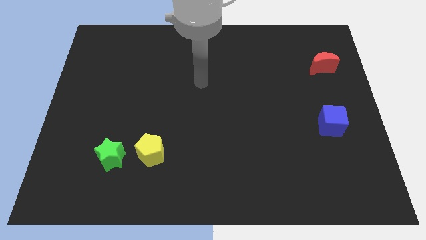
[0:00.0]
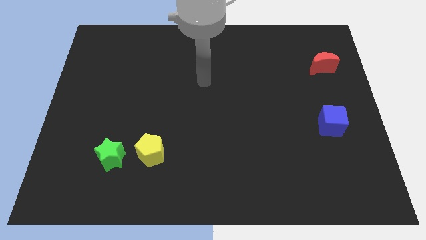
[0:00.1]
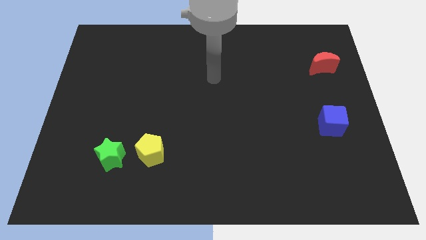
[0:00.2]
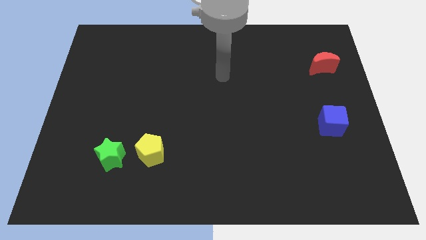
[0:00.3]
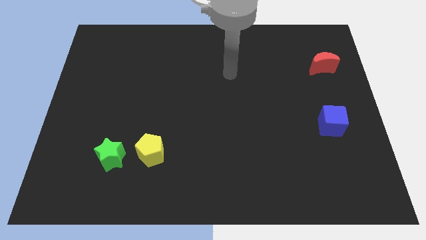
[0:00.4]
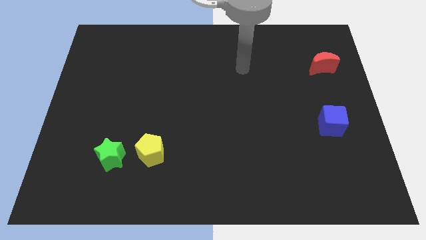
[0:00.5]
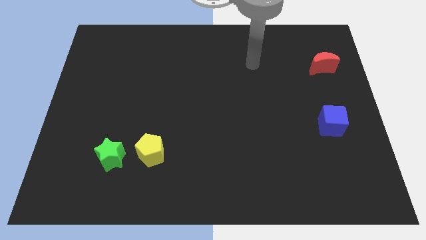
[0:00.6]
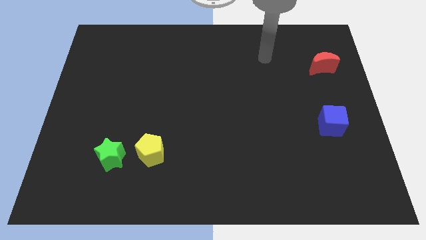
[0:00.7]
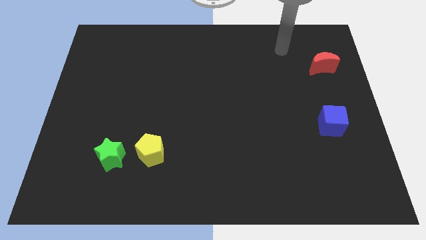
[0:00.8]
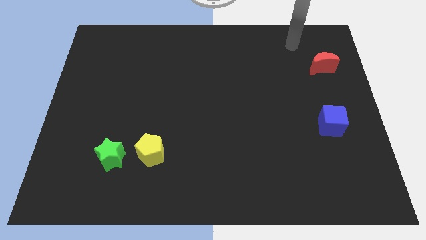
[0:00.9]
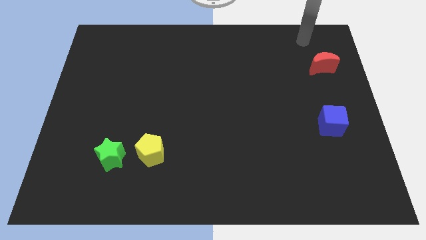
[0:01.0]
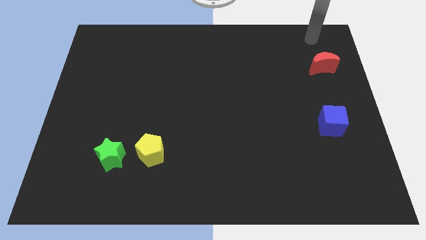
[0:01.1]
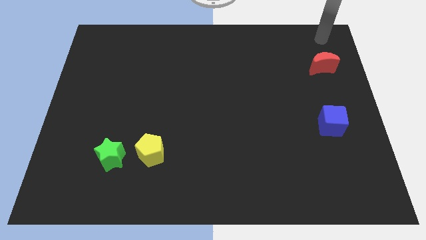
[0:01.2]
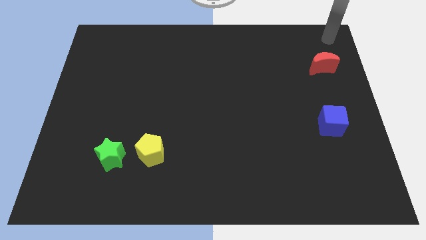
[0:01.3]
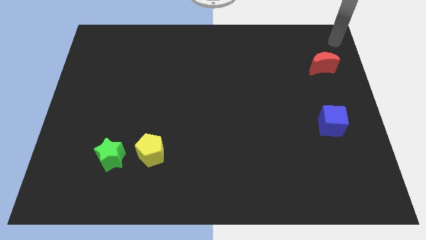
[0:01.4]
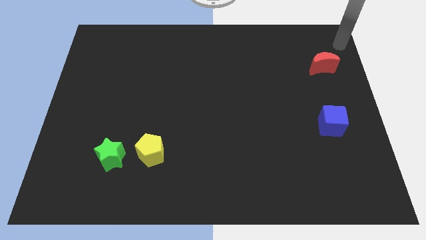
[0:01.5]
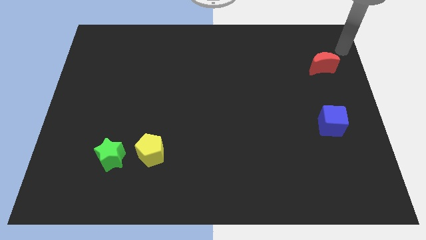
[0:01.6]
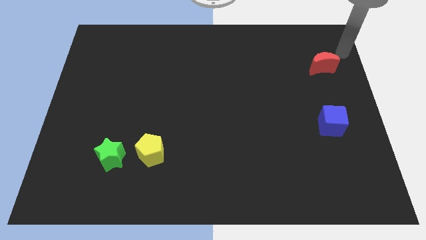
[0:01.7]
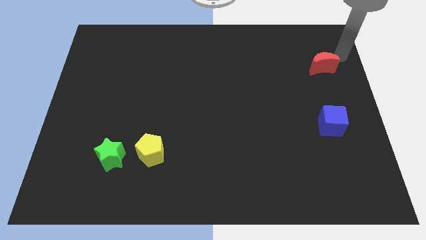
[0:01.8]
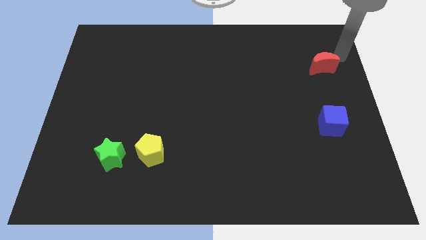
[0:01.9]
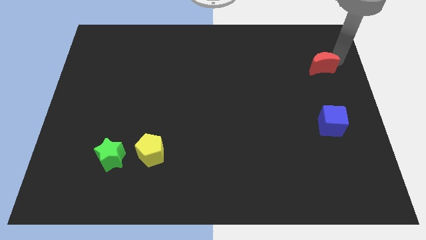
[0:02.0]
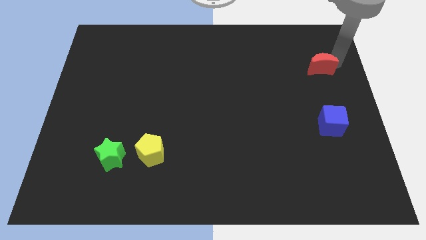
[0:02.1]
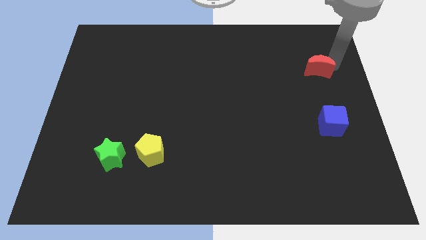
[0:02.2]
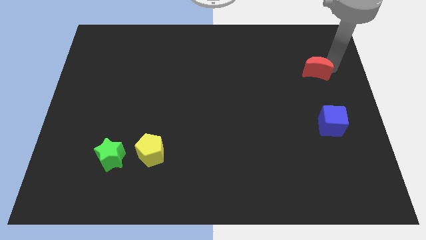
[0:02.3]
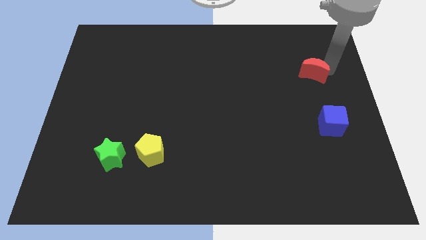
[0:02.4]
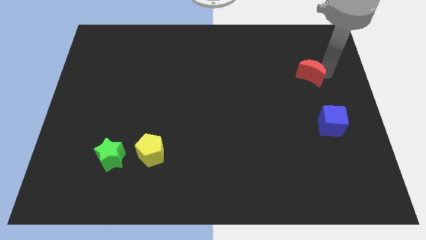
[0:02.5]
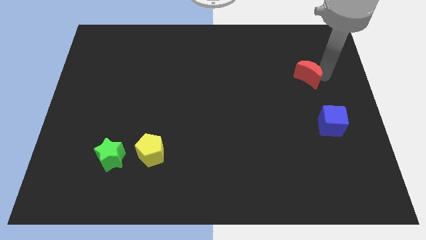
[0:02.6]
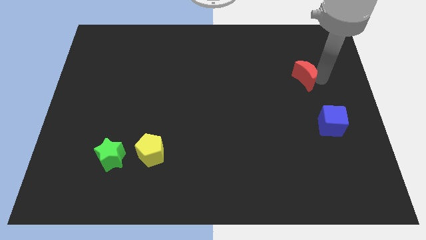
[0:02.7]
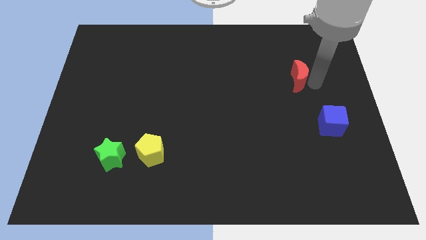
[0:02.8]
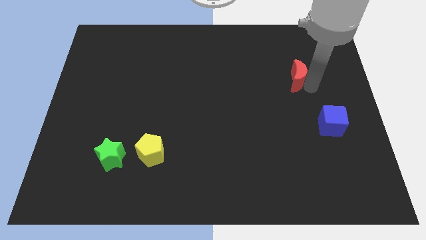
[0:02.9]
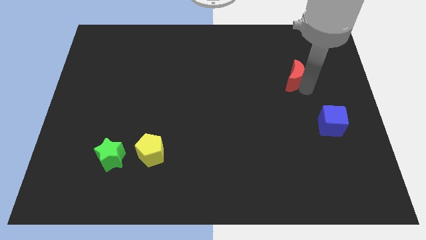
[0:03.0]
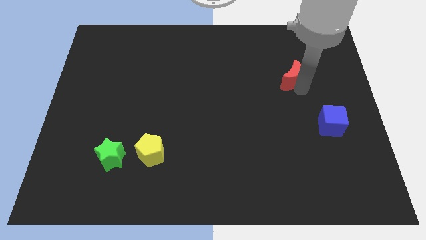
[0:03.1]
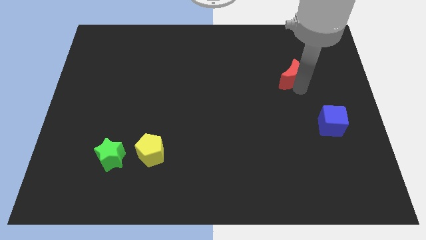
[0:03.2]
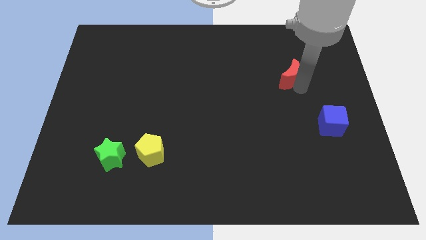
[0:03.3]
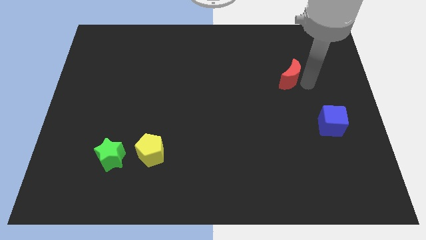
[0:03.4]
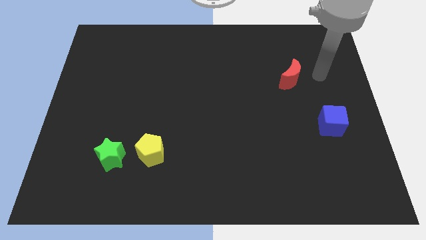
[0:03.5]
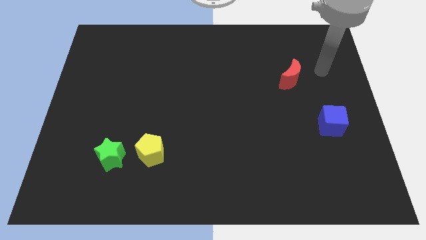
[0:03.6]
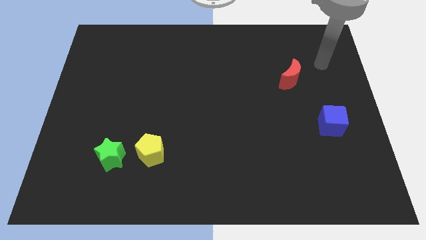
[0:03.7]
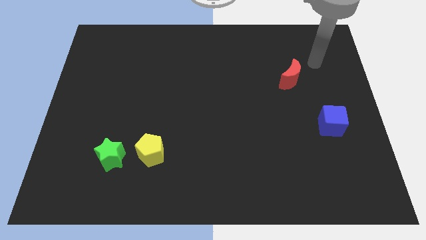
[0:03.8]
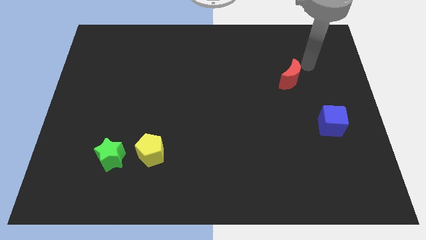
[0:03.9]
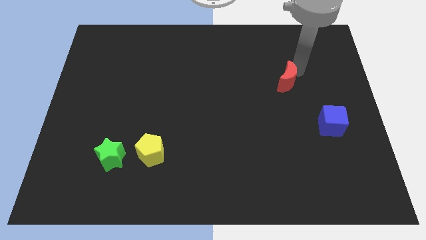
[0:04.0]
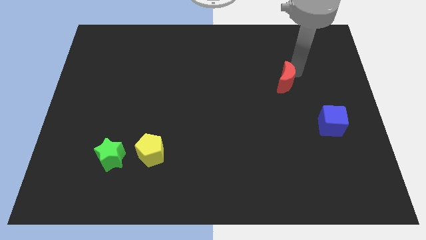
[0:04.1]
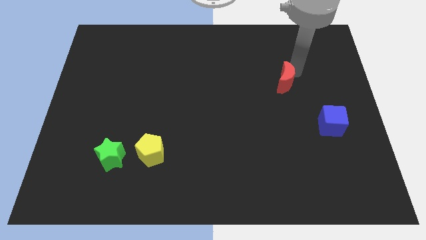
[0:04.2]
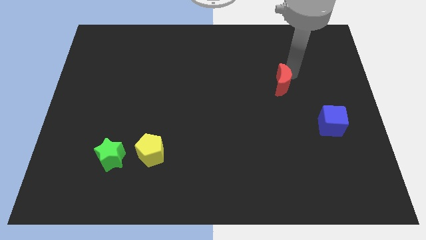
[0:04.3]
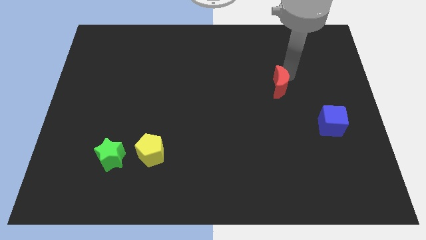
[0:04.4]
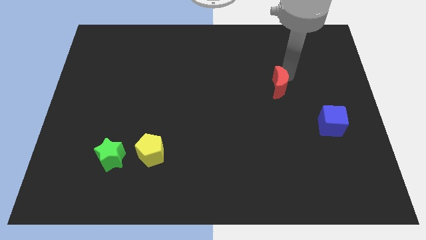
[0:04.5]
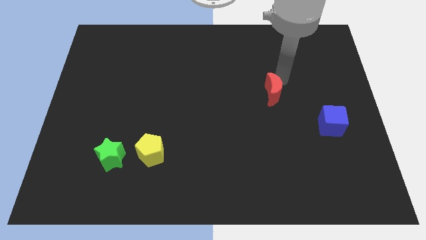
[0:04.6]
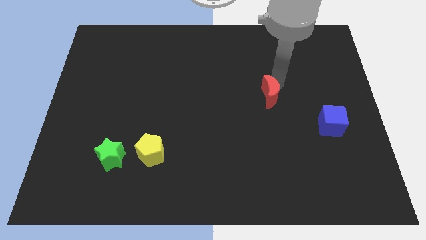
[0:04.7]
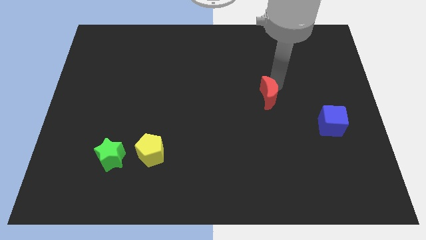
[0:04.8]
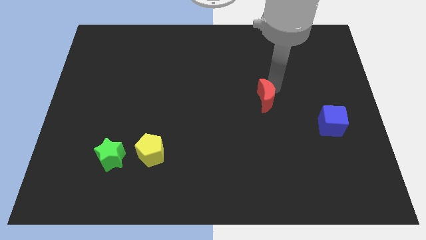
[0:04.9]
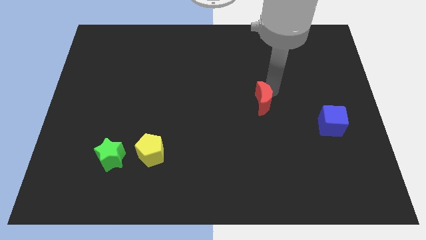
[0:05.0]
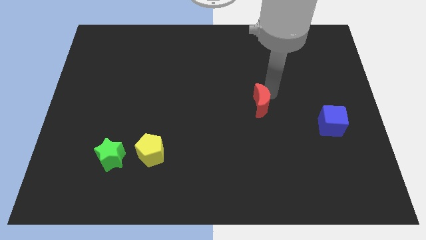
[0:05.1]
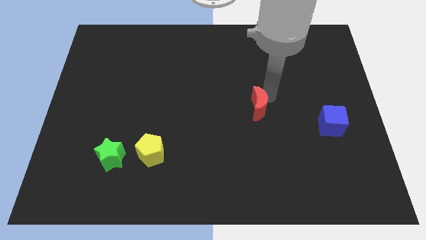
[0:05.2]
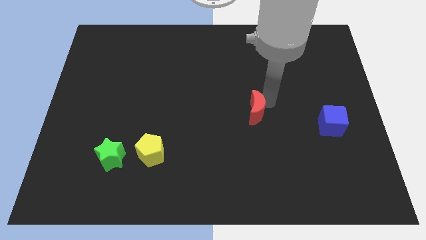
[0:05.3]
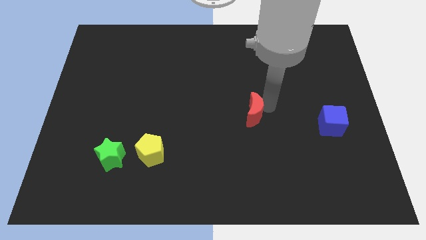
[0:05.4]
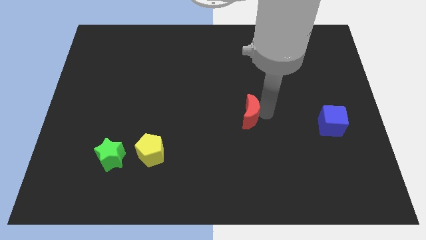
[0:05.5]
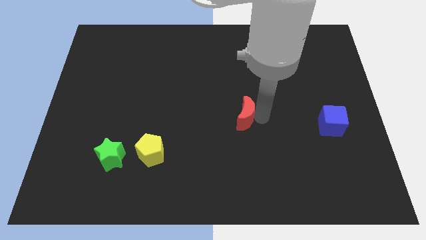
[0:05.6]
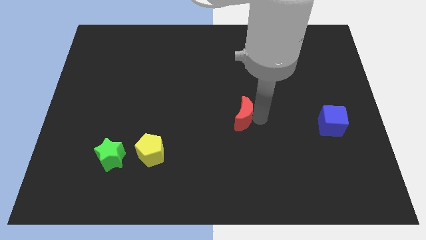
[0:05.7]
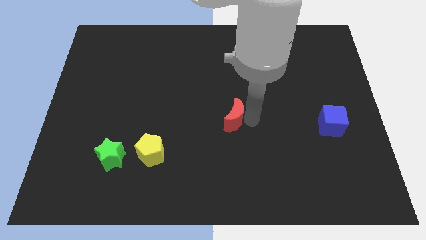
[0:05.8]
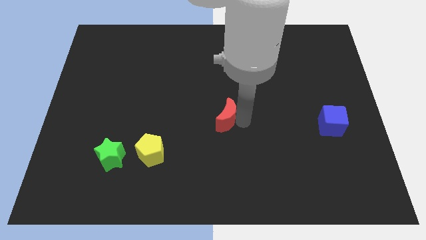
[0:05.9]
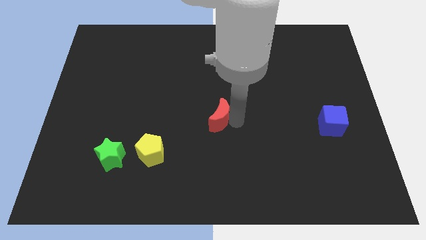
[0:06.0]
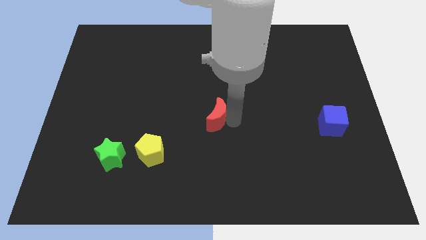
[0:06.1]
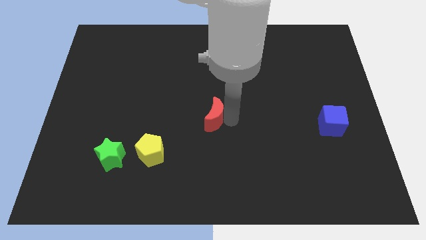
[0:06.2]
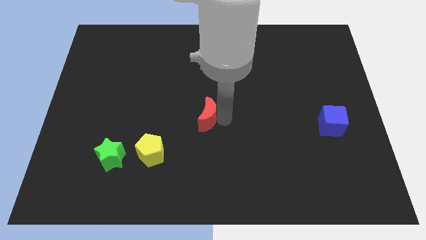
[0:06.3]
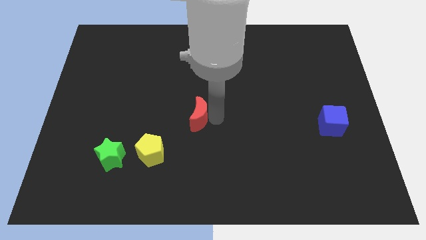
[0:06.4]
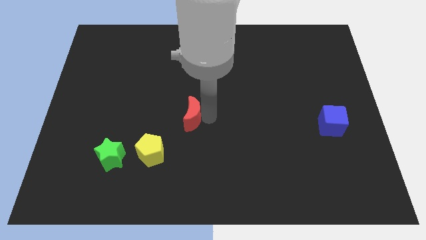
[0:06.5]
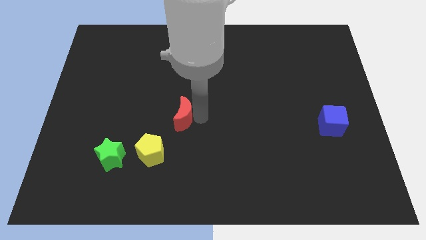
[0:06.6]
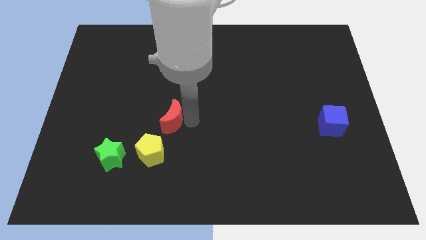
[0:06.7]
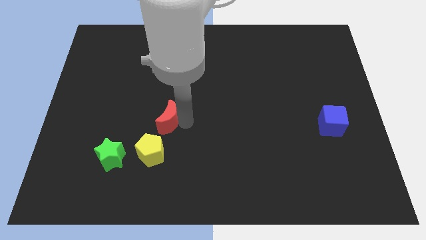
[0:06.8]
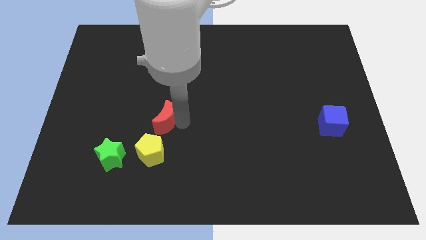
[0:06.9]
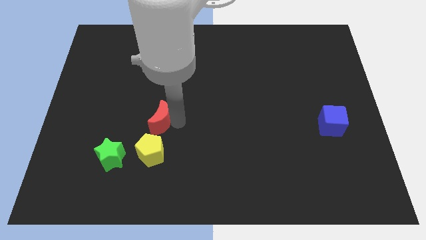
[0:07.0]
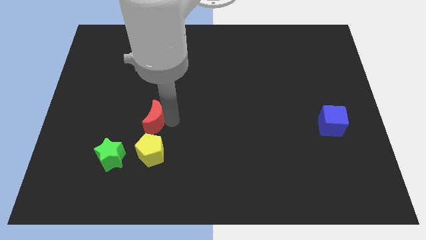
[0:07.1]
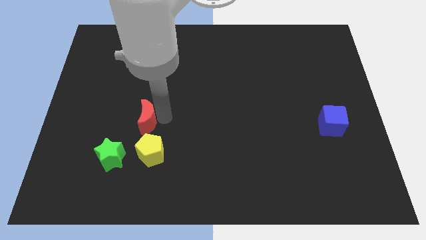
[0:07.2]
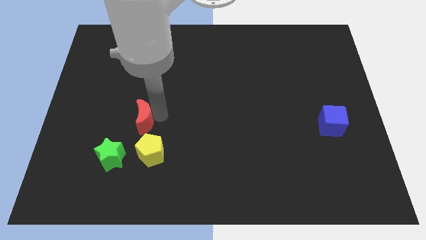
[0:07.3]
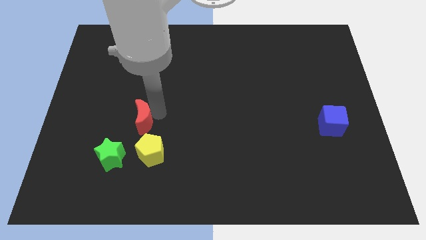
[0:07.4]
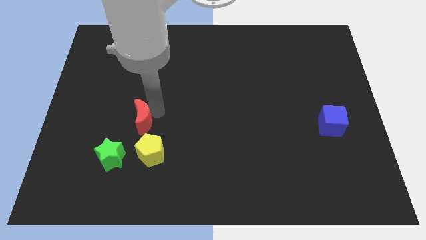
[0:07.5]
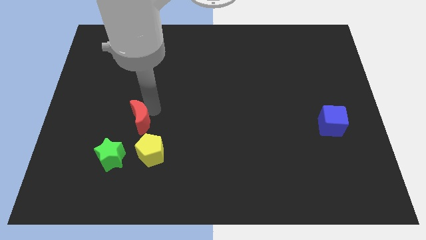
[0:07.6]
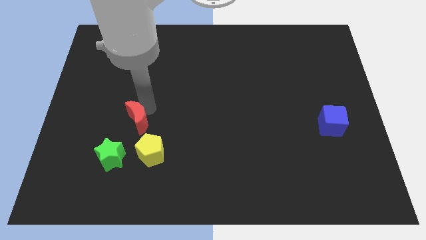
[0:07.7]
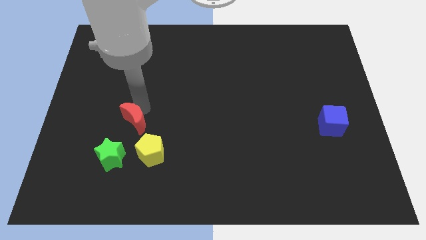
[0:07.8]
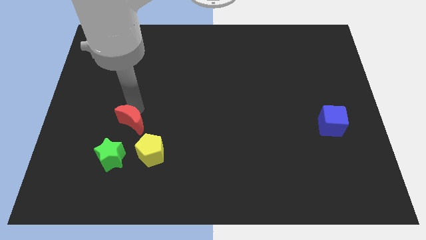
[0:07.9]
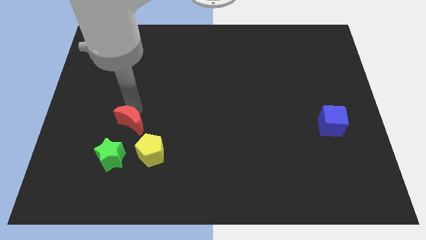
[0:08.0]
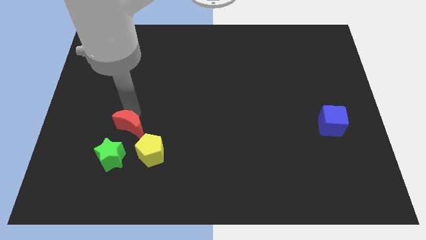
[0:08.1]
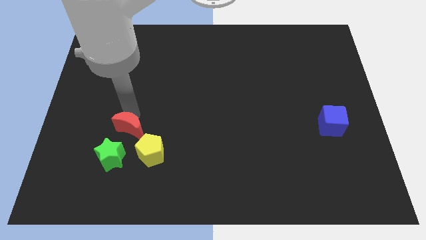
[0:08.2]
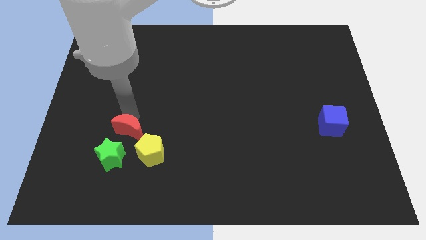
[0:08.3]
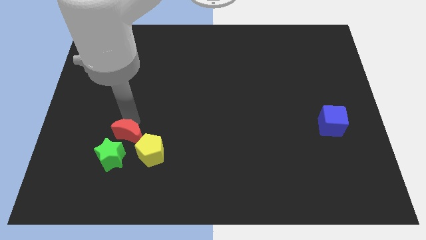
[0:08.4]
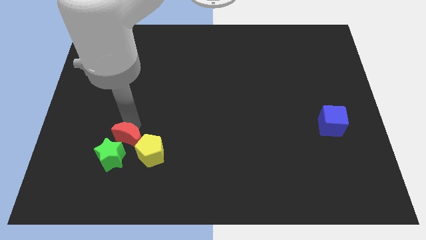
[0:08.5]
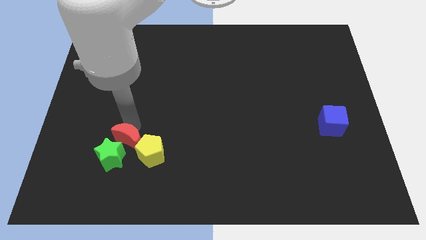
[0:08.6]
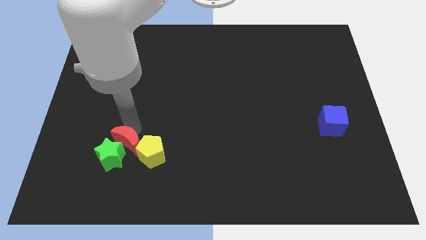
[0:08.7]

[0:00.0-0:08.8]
put the moon next to the star
